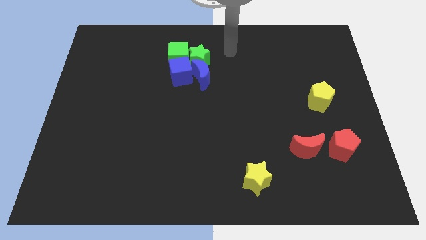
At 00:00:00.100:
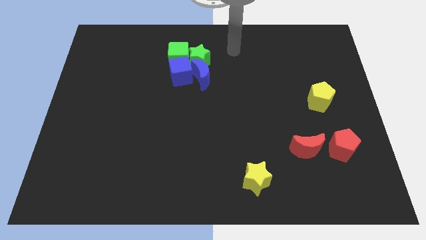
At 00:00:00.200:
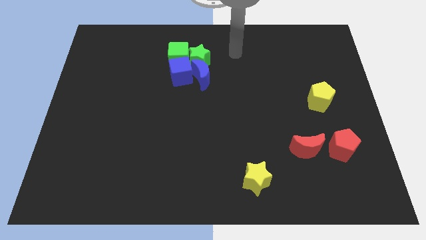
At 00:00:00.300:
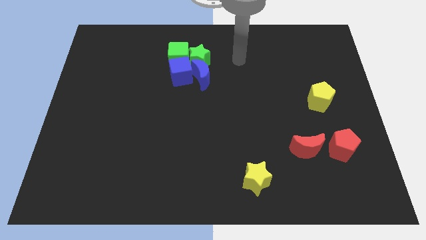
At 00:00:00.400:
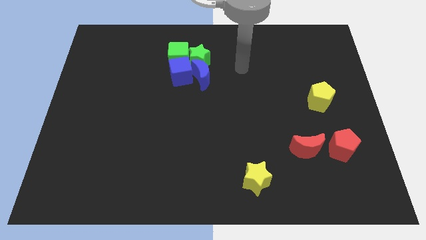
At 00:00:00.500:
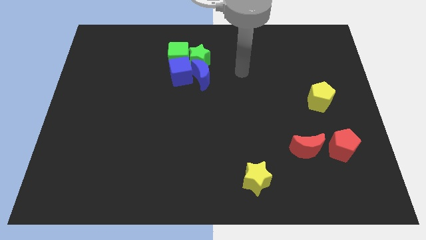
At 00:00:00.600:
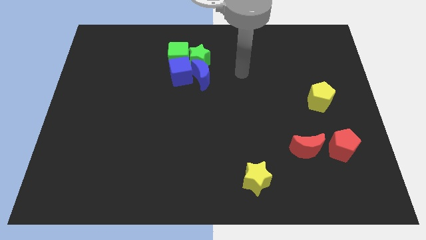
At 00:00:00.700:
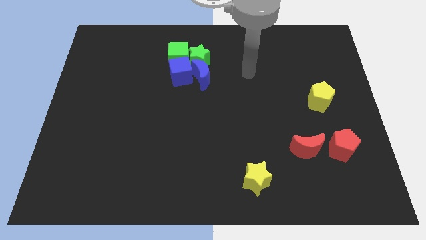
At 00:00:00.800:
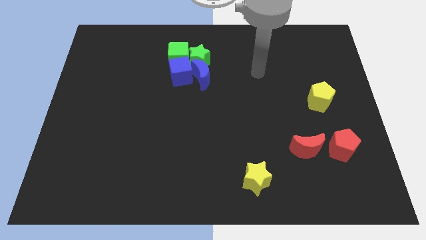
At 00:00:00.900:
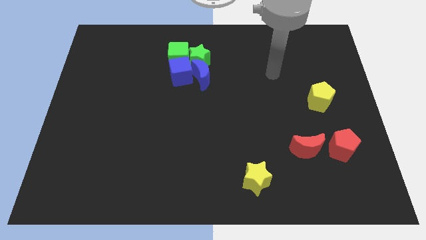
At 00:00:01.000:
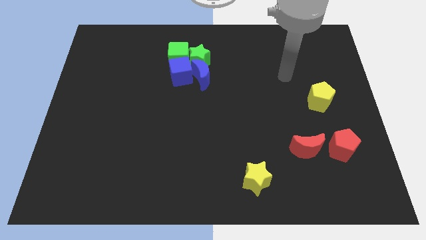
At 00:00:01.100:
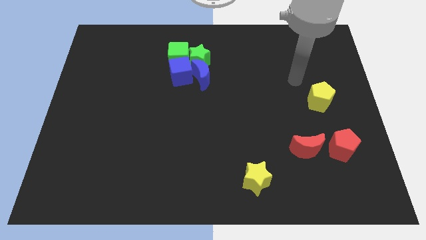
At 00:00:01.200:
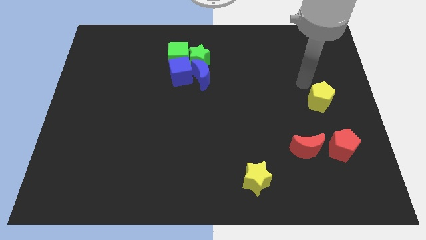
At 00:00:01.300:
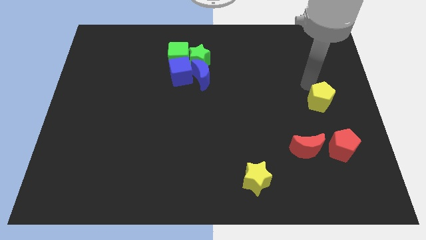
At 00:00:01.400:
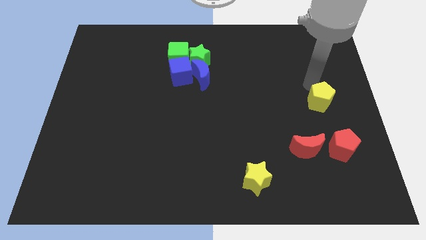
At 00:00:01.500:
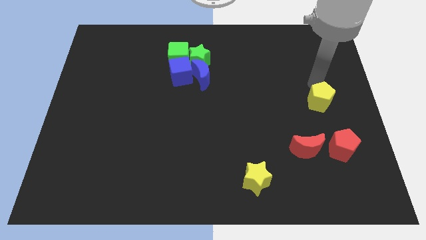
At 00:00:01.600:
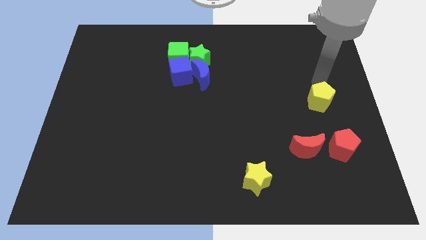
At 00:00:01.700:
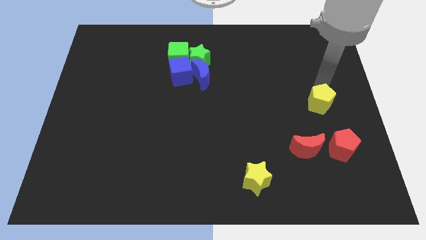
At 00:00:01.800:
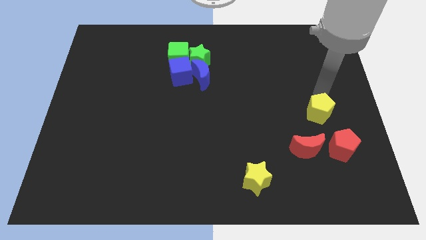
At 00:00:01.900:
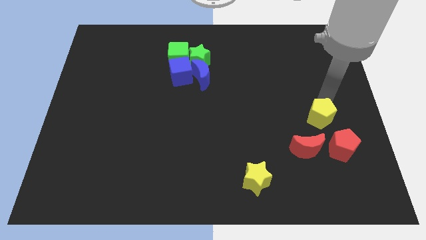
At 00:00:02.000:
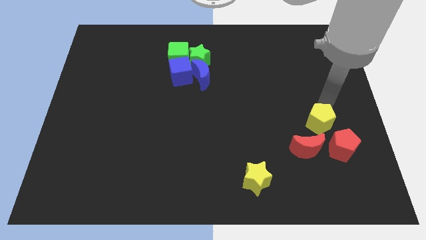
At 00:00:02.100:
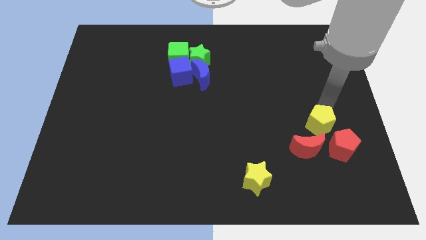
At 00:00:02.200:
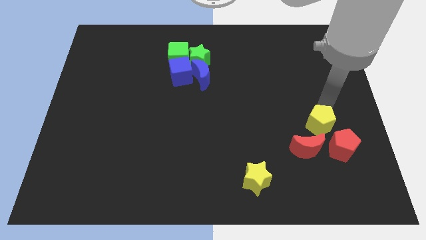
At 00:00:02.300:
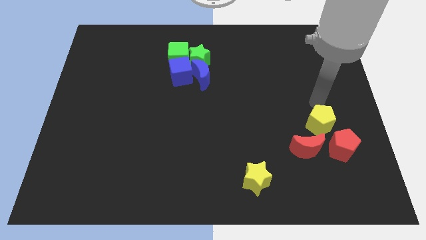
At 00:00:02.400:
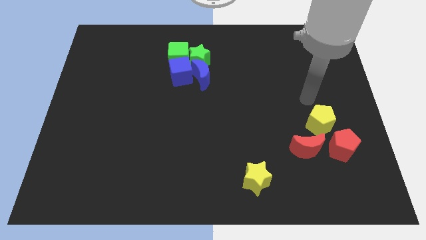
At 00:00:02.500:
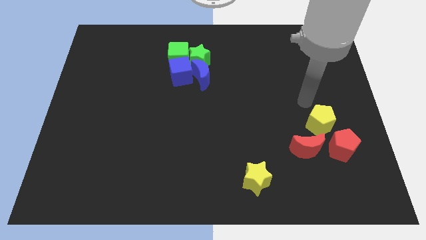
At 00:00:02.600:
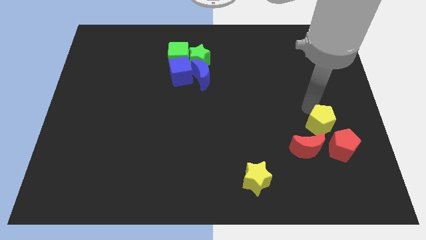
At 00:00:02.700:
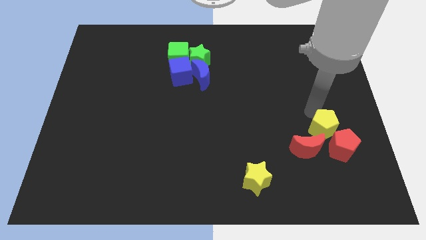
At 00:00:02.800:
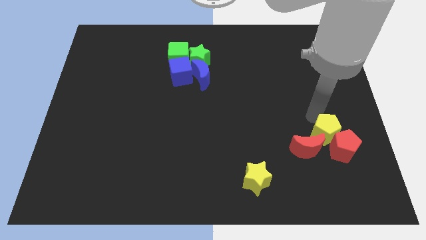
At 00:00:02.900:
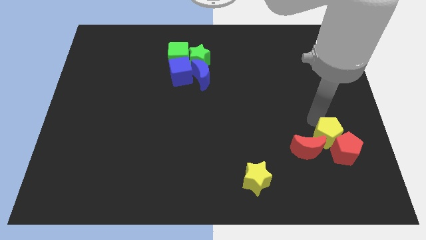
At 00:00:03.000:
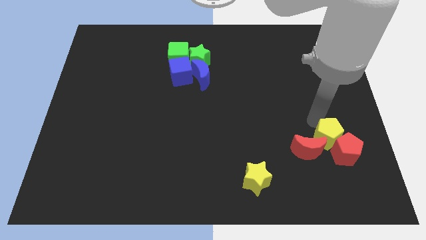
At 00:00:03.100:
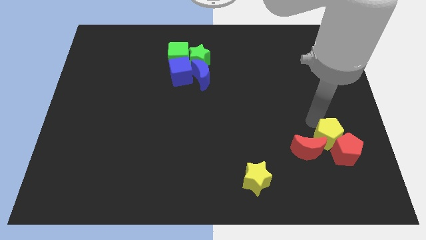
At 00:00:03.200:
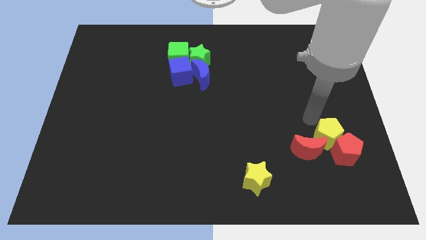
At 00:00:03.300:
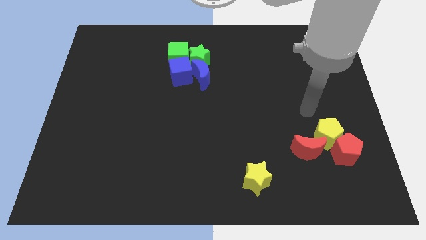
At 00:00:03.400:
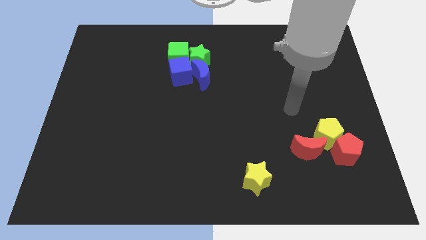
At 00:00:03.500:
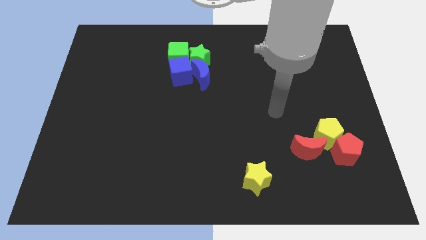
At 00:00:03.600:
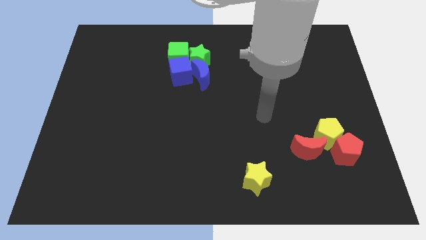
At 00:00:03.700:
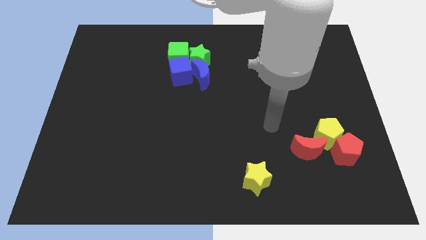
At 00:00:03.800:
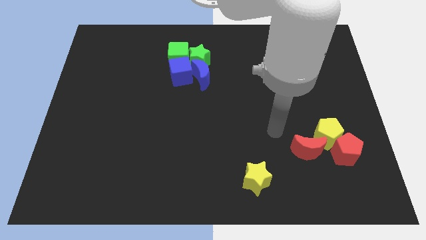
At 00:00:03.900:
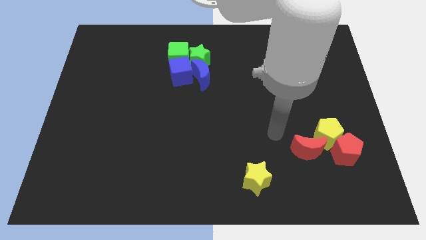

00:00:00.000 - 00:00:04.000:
push the yellow pentagon into red pentagon

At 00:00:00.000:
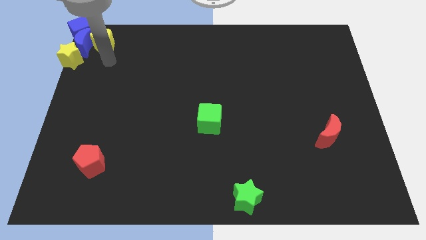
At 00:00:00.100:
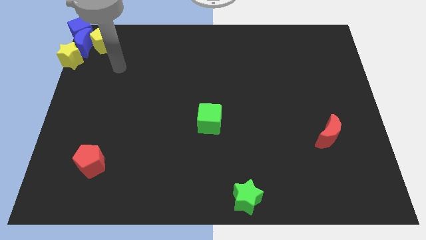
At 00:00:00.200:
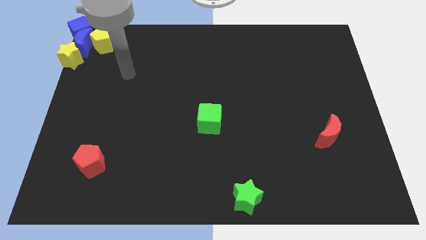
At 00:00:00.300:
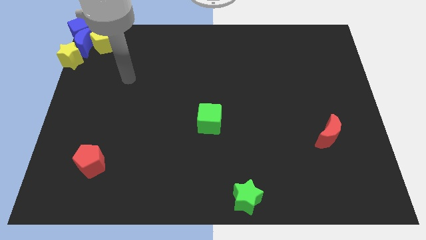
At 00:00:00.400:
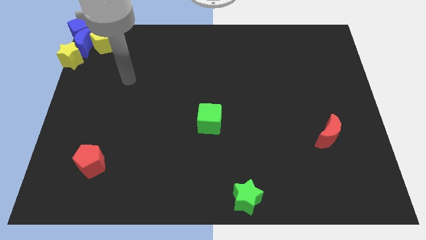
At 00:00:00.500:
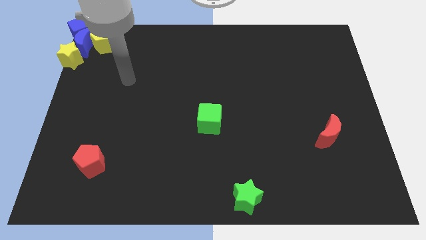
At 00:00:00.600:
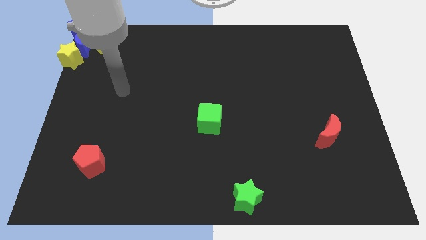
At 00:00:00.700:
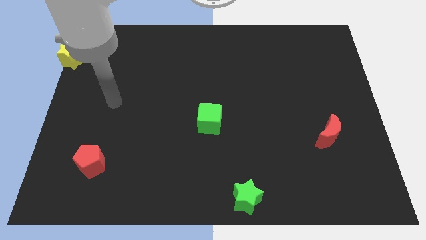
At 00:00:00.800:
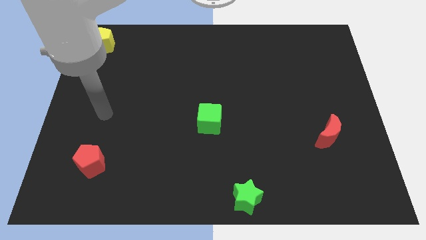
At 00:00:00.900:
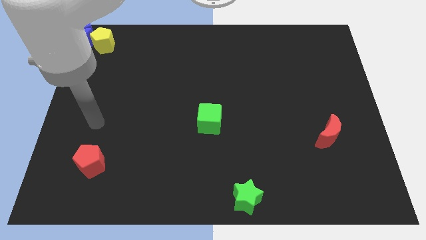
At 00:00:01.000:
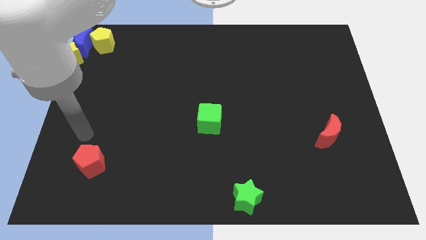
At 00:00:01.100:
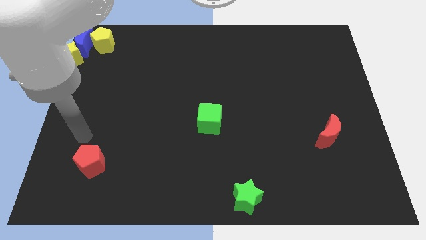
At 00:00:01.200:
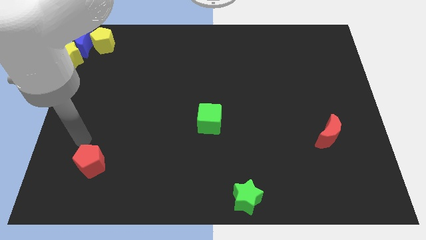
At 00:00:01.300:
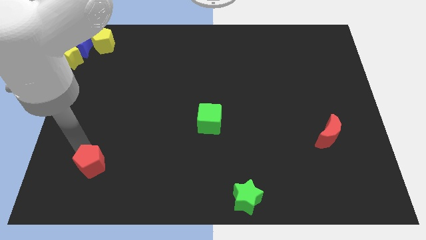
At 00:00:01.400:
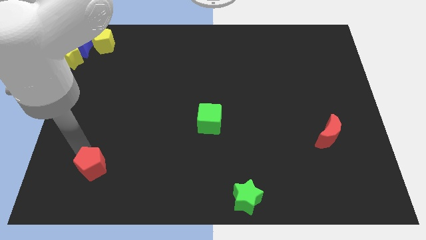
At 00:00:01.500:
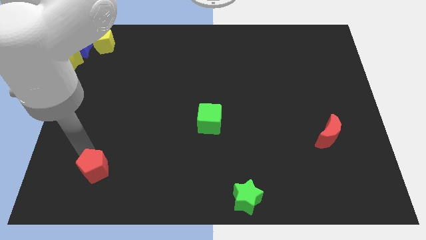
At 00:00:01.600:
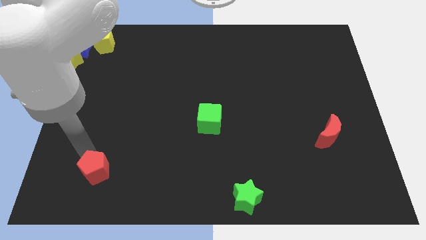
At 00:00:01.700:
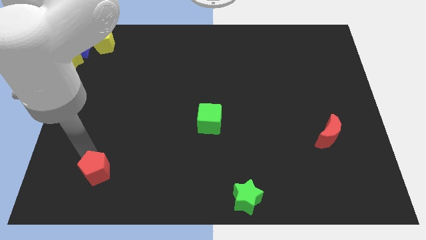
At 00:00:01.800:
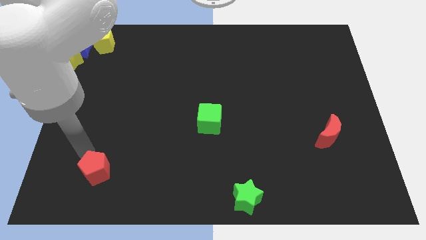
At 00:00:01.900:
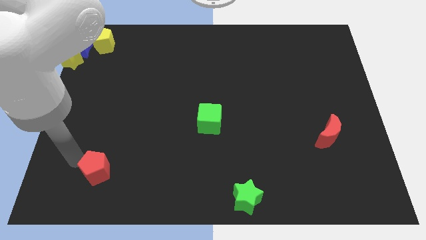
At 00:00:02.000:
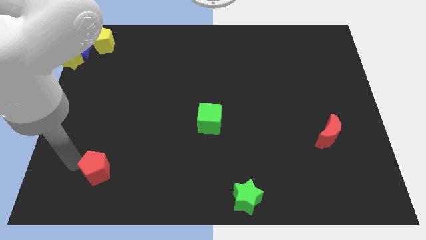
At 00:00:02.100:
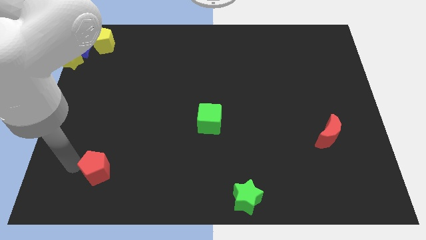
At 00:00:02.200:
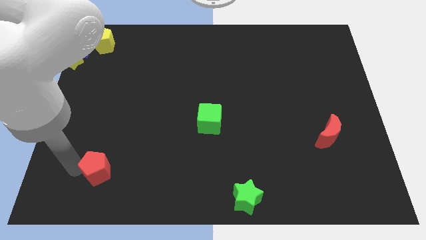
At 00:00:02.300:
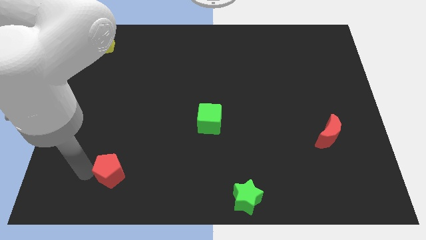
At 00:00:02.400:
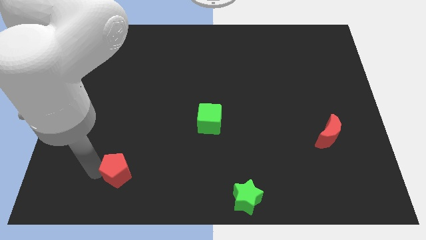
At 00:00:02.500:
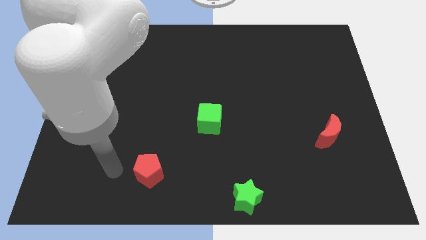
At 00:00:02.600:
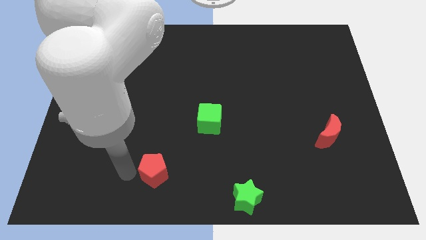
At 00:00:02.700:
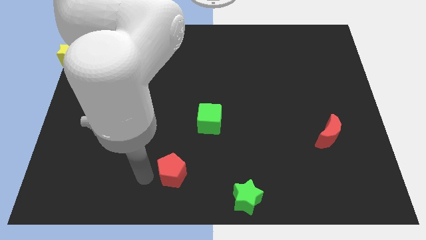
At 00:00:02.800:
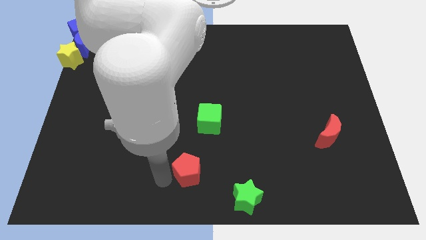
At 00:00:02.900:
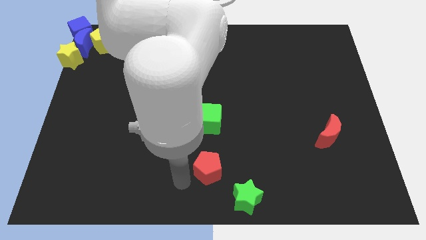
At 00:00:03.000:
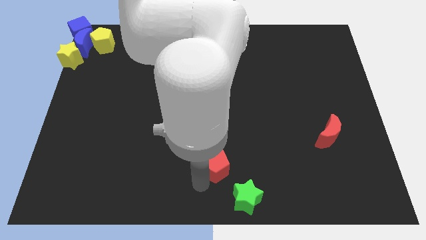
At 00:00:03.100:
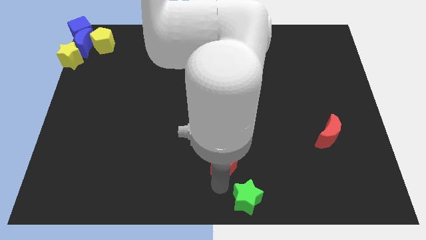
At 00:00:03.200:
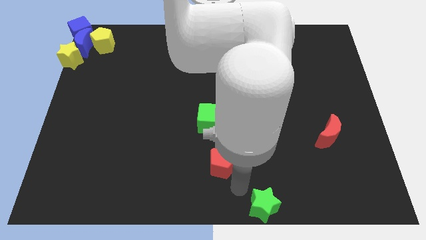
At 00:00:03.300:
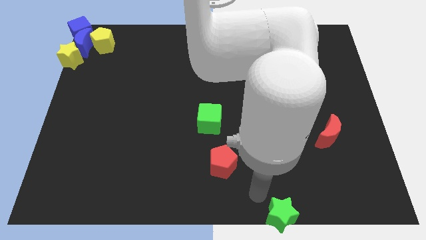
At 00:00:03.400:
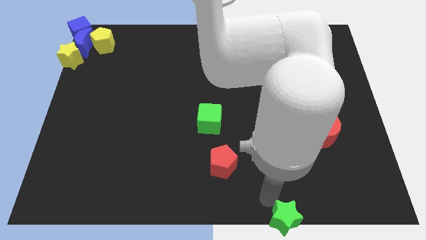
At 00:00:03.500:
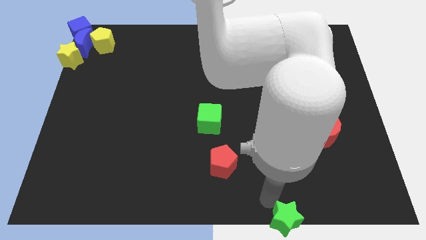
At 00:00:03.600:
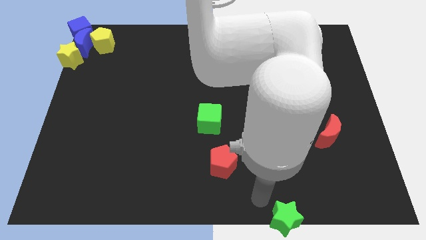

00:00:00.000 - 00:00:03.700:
place the red pentagon vertically below the green cube

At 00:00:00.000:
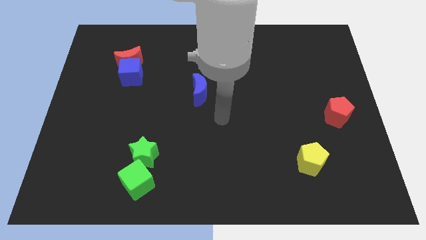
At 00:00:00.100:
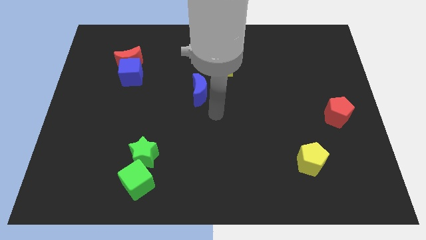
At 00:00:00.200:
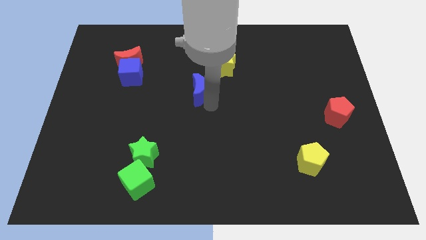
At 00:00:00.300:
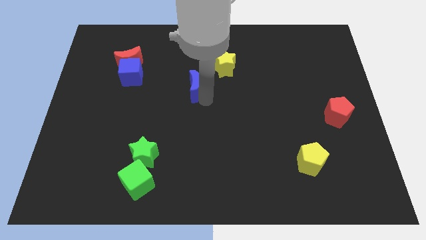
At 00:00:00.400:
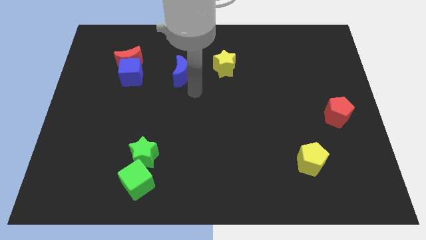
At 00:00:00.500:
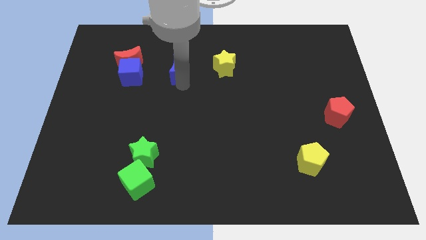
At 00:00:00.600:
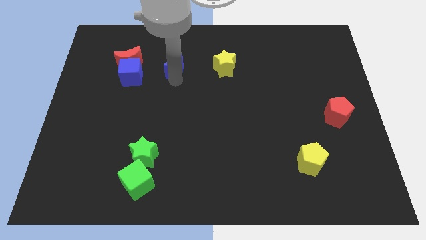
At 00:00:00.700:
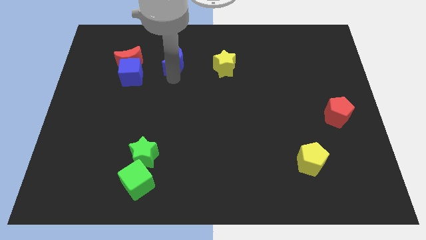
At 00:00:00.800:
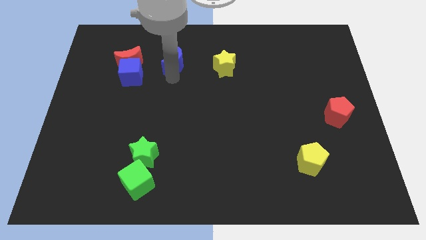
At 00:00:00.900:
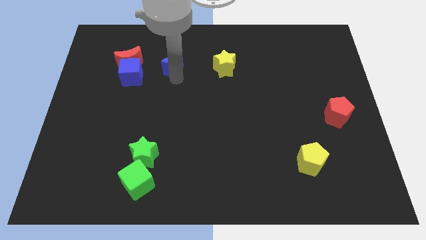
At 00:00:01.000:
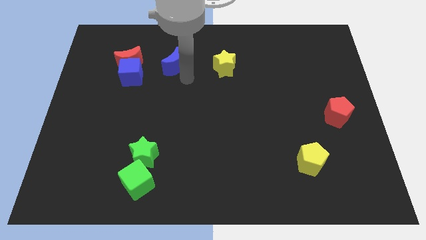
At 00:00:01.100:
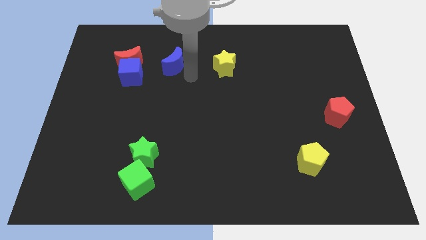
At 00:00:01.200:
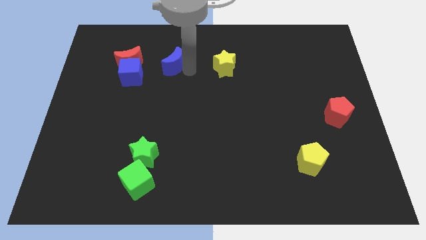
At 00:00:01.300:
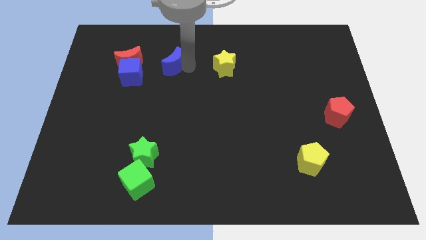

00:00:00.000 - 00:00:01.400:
place blue crescent to the left of yellow star
